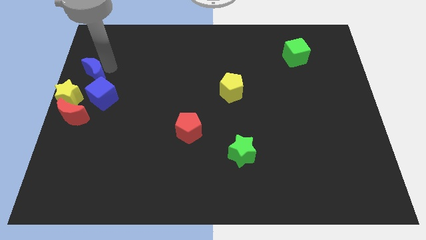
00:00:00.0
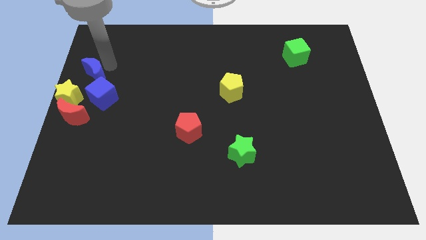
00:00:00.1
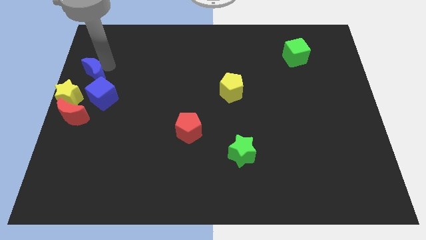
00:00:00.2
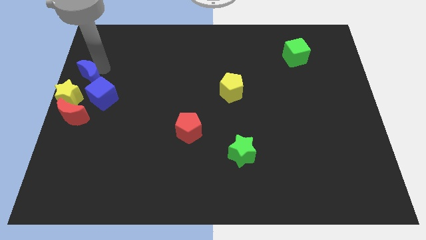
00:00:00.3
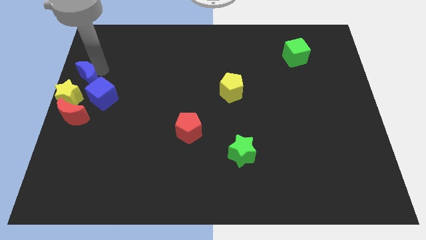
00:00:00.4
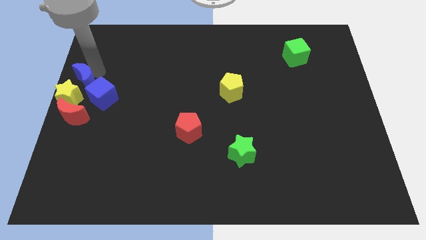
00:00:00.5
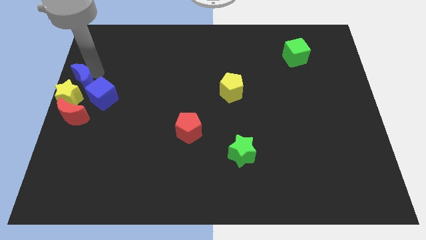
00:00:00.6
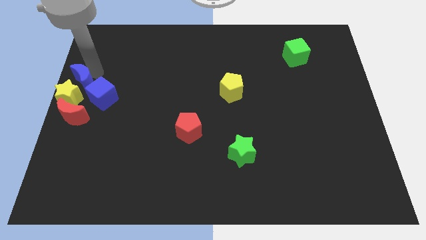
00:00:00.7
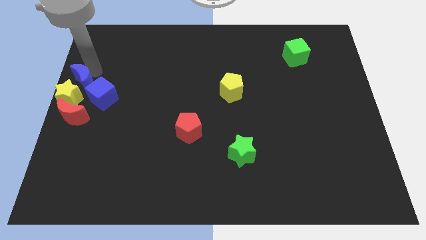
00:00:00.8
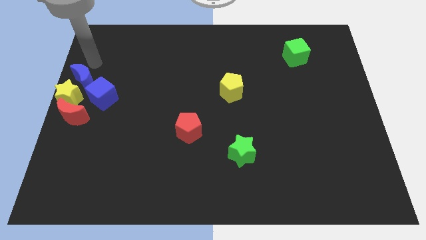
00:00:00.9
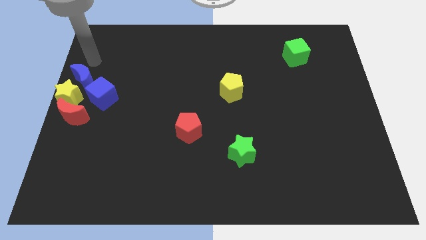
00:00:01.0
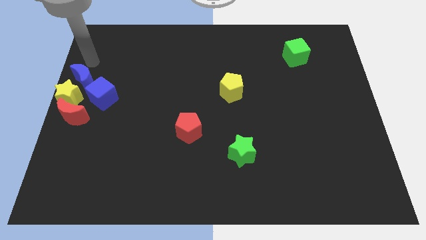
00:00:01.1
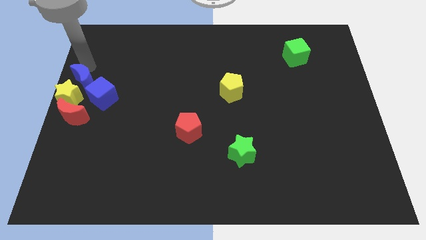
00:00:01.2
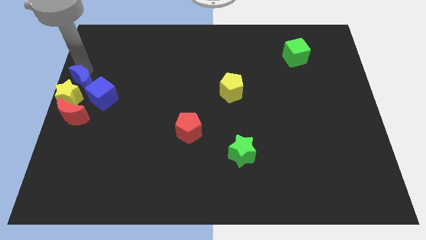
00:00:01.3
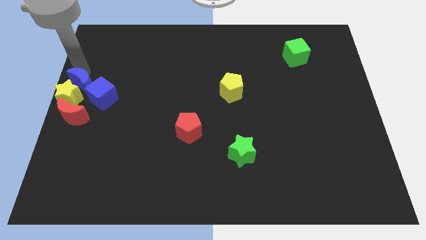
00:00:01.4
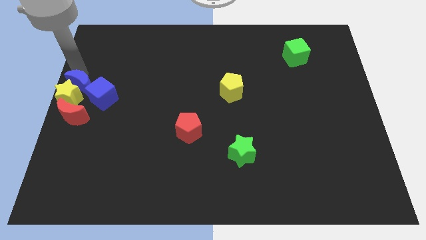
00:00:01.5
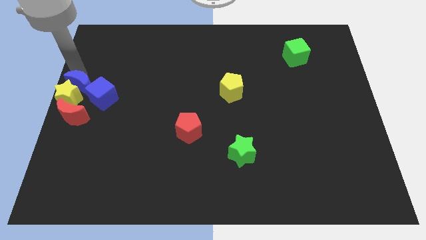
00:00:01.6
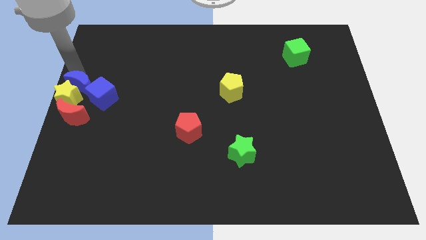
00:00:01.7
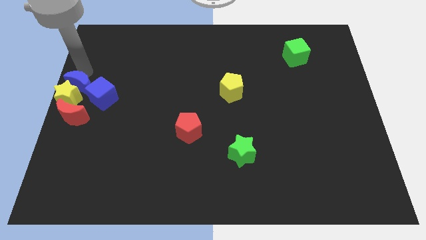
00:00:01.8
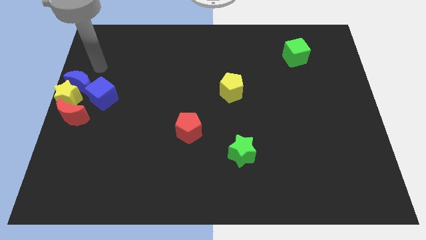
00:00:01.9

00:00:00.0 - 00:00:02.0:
push the blue moon into the yellow star

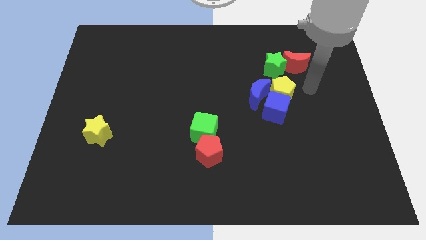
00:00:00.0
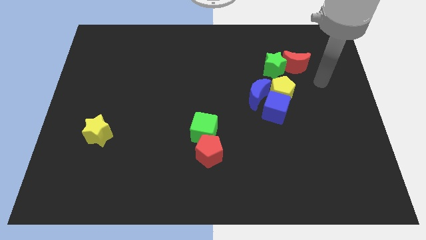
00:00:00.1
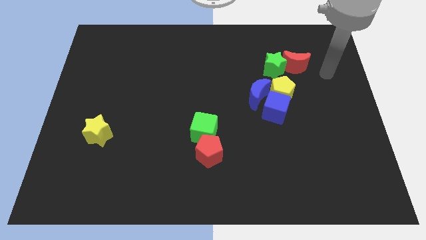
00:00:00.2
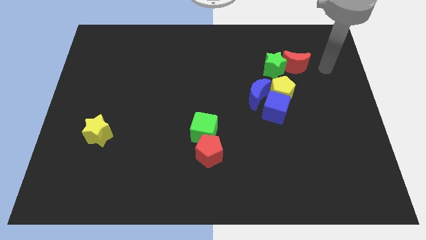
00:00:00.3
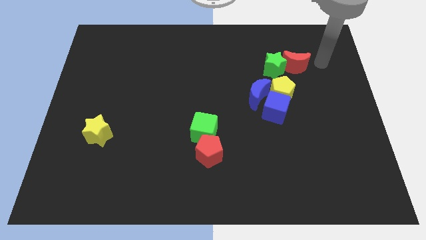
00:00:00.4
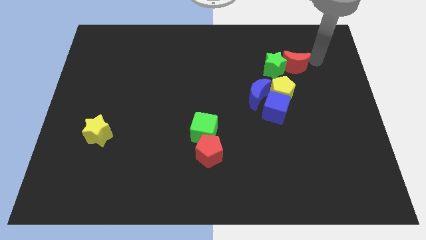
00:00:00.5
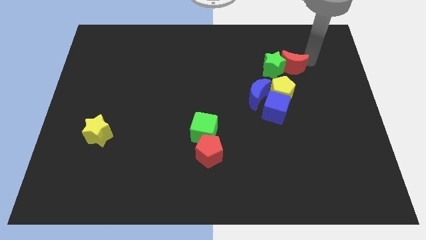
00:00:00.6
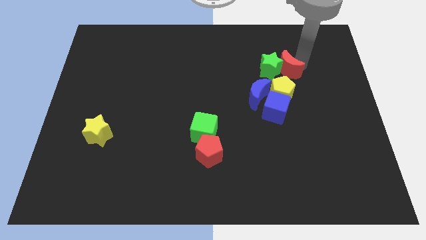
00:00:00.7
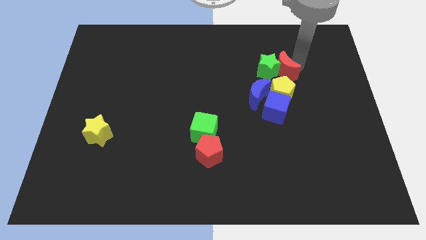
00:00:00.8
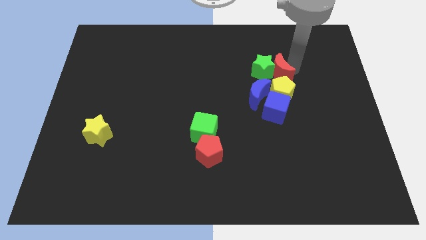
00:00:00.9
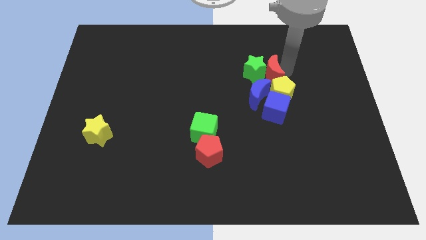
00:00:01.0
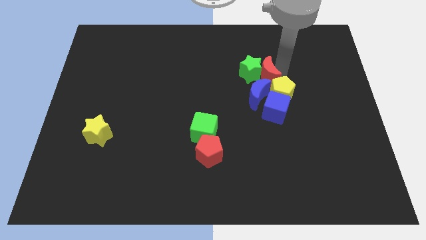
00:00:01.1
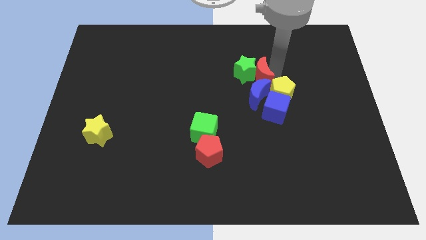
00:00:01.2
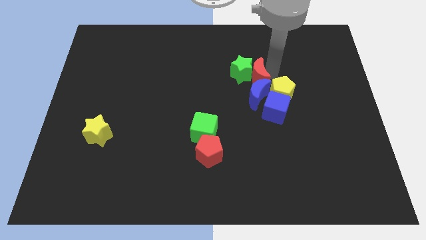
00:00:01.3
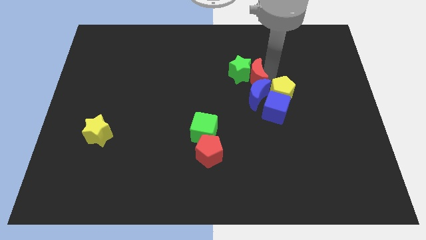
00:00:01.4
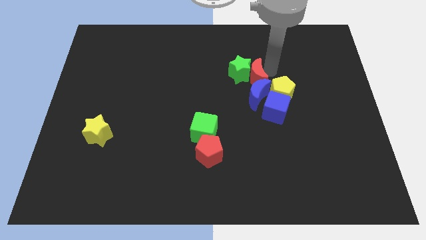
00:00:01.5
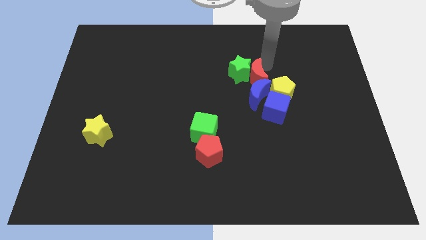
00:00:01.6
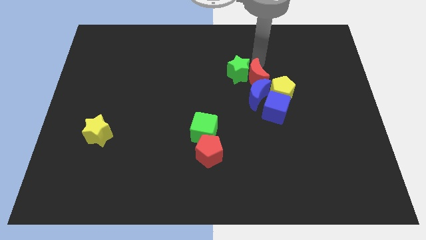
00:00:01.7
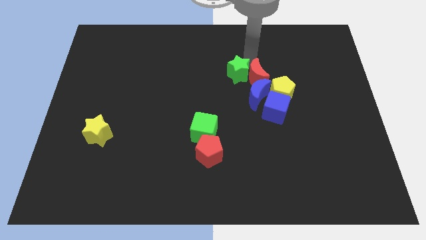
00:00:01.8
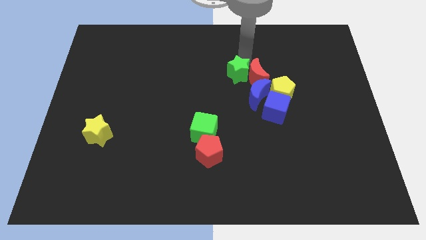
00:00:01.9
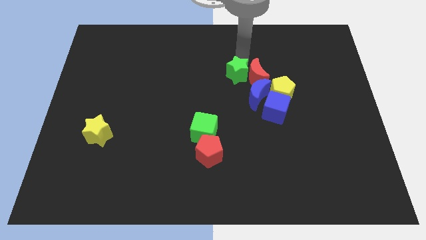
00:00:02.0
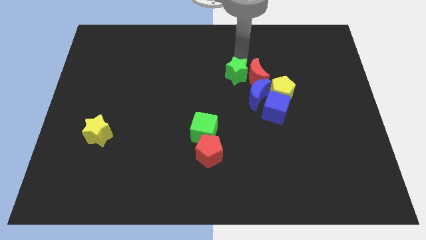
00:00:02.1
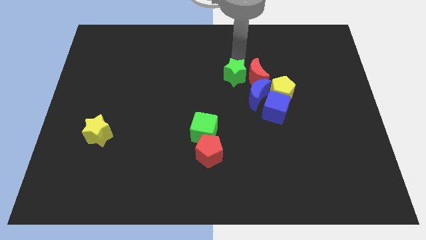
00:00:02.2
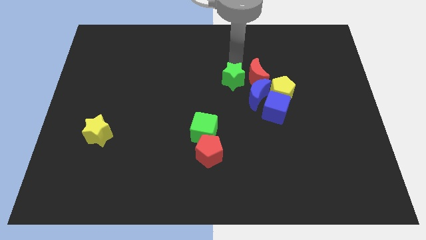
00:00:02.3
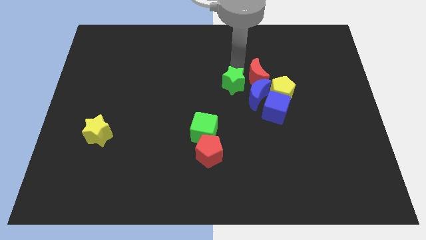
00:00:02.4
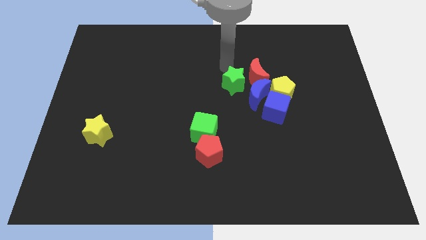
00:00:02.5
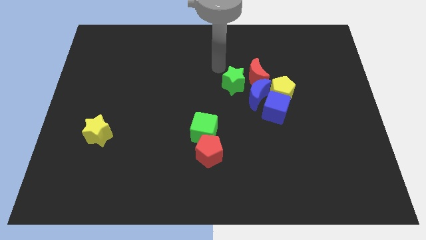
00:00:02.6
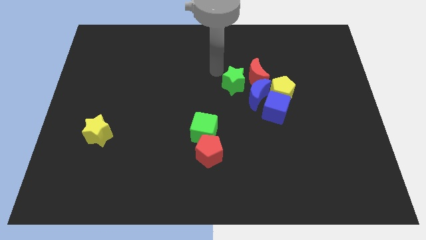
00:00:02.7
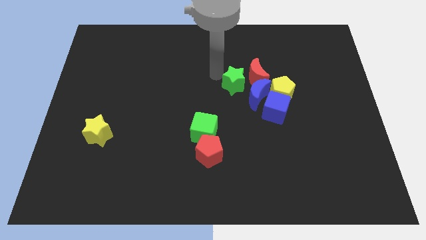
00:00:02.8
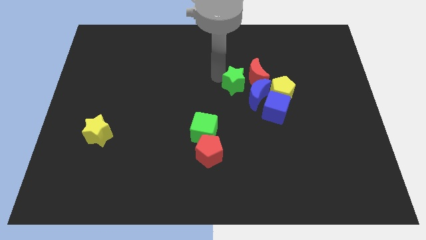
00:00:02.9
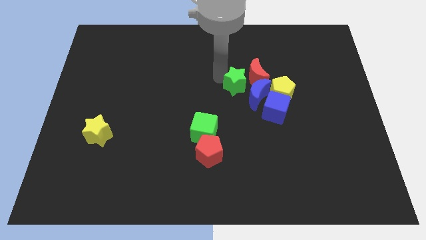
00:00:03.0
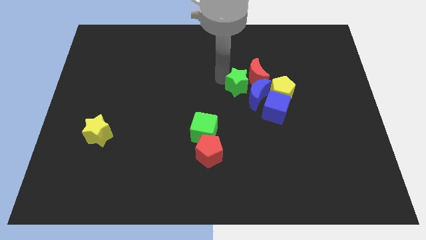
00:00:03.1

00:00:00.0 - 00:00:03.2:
separate the green star from the red moon

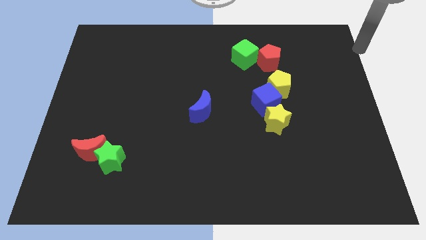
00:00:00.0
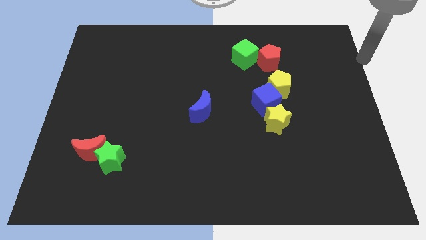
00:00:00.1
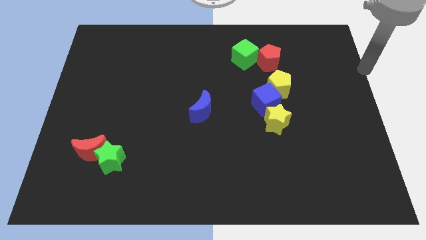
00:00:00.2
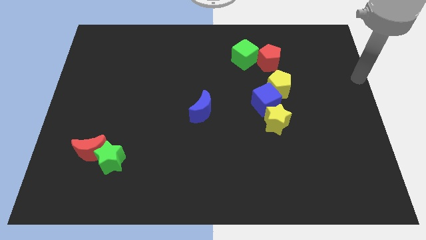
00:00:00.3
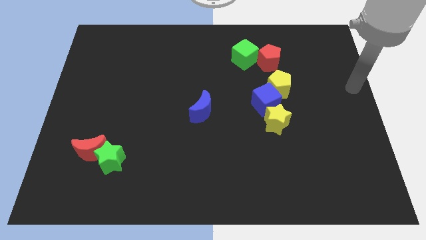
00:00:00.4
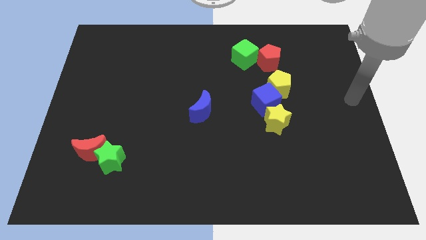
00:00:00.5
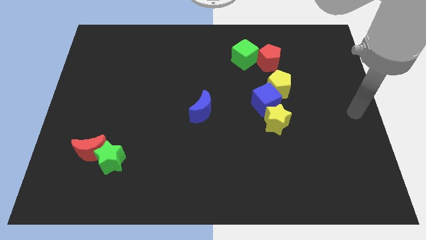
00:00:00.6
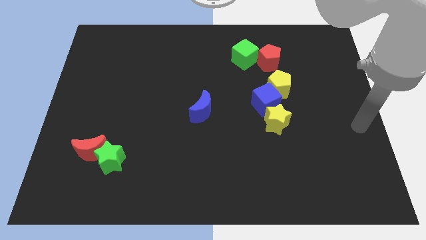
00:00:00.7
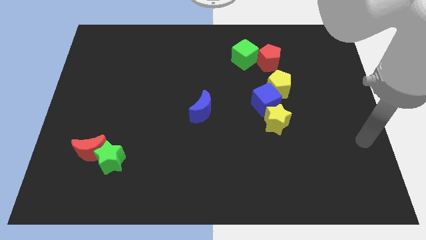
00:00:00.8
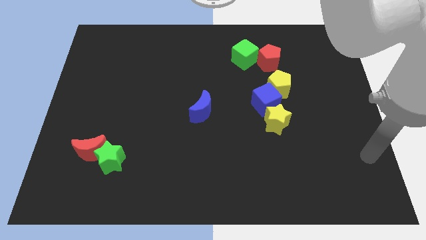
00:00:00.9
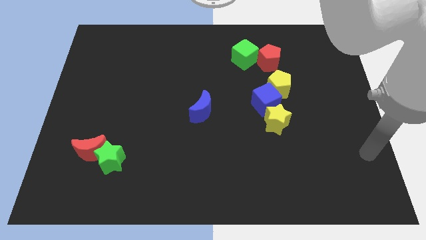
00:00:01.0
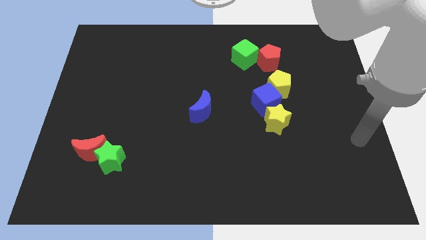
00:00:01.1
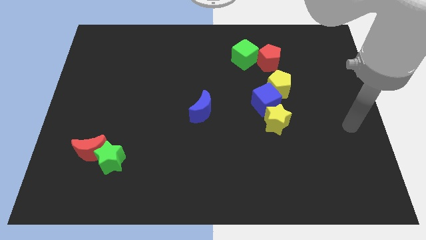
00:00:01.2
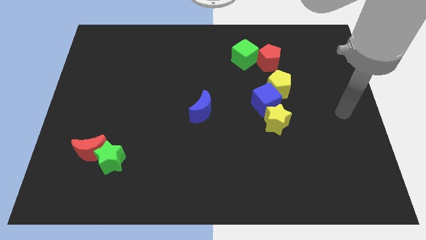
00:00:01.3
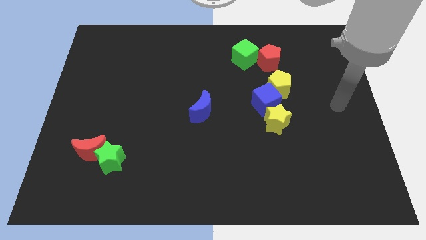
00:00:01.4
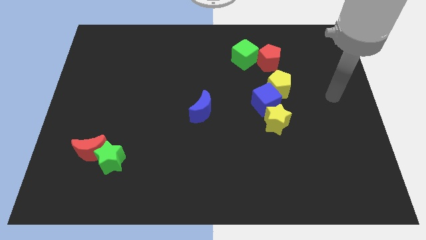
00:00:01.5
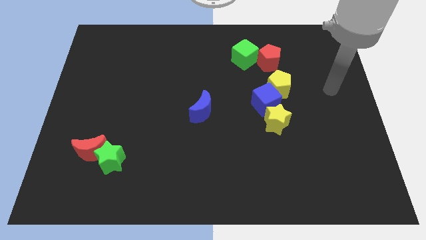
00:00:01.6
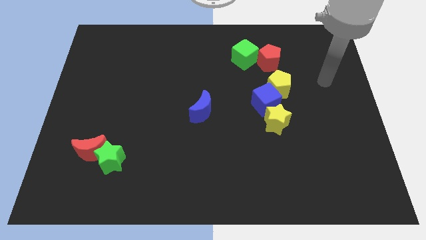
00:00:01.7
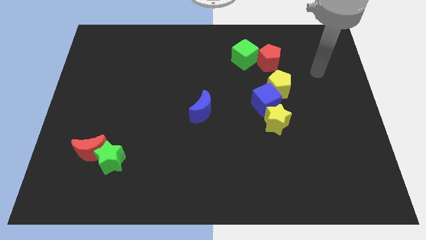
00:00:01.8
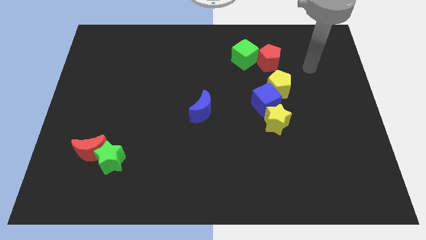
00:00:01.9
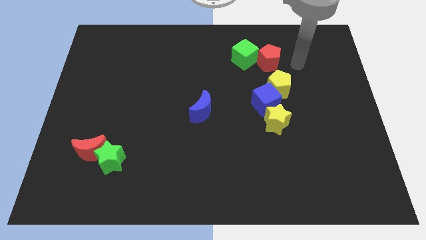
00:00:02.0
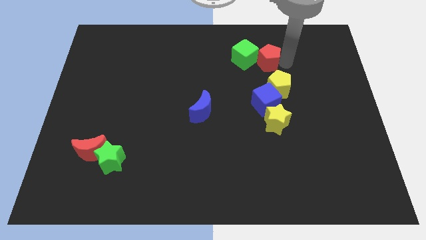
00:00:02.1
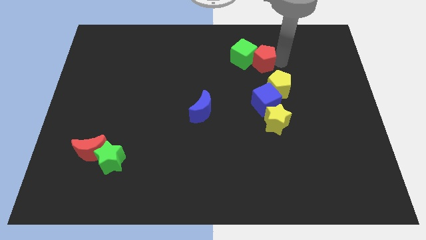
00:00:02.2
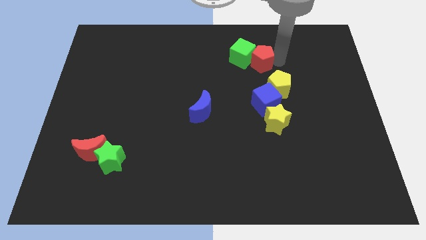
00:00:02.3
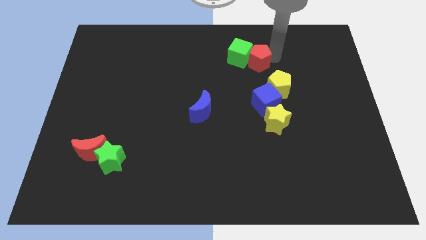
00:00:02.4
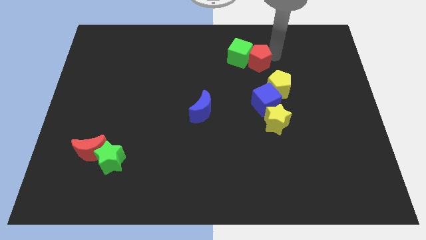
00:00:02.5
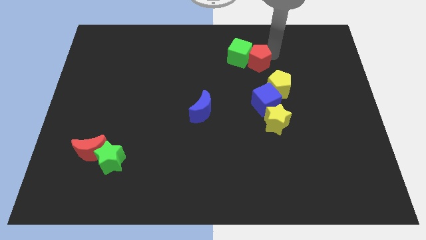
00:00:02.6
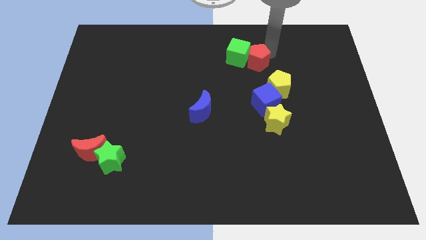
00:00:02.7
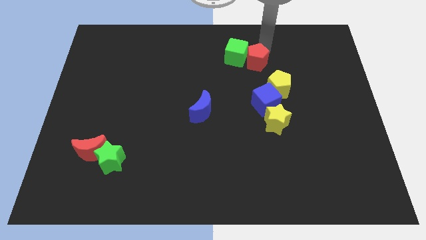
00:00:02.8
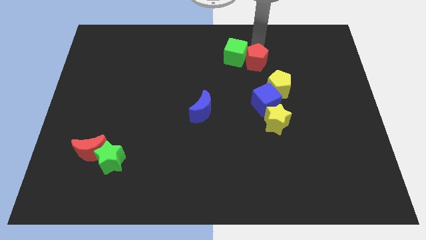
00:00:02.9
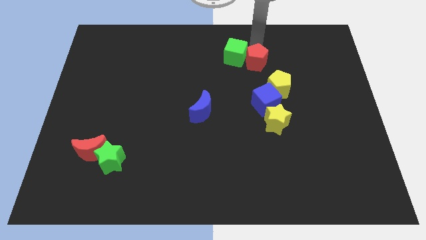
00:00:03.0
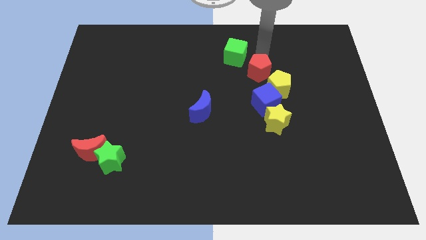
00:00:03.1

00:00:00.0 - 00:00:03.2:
push red pentagon above blue cube

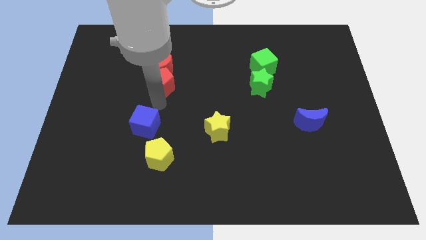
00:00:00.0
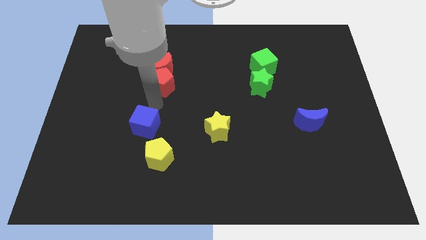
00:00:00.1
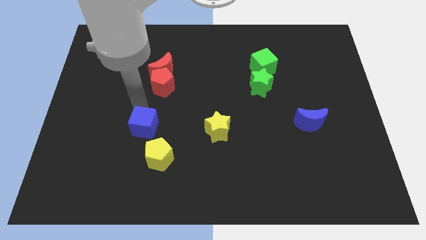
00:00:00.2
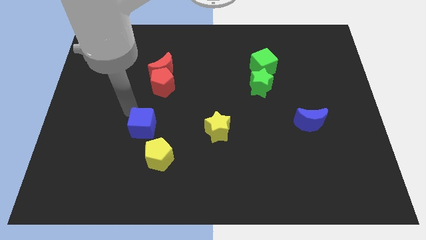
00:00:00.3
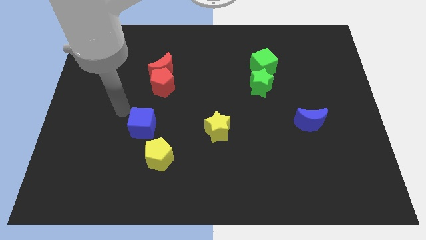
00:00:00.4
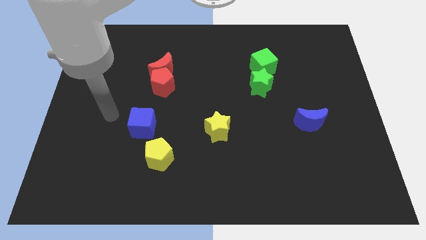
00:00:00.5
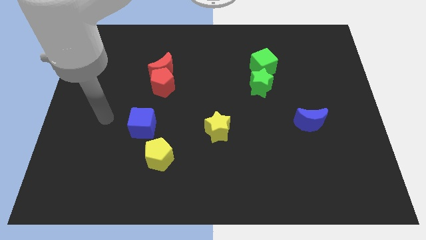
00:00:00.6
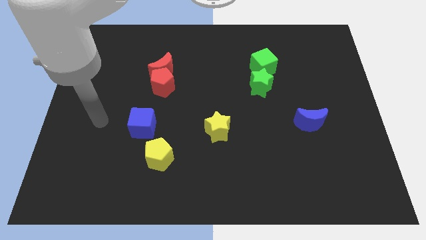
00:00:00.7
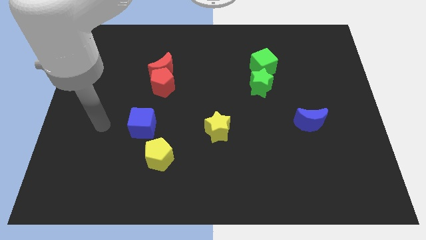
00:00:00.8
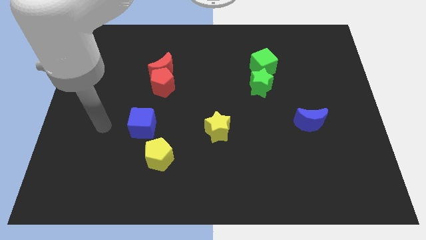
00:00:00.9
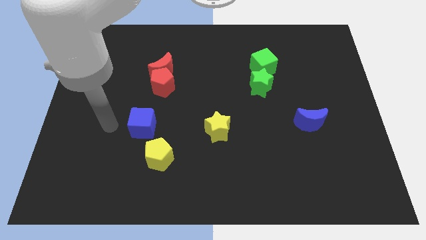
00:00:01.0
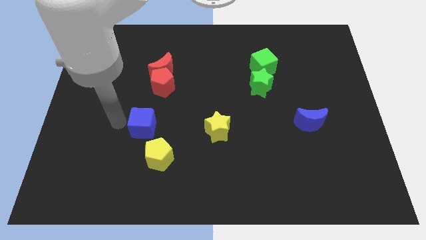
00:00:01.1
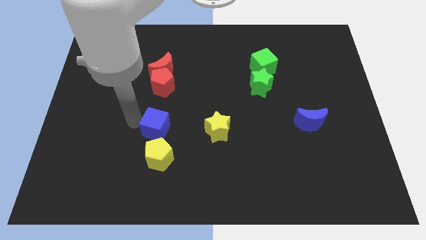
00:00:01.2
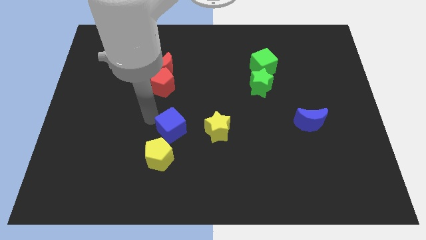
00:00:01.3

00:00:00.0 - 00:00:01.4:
push the blue cube slightly to the left side of the yellow star
